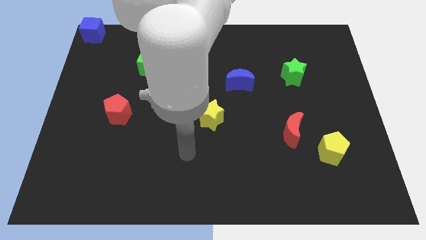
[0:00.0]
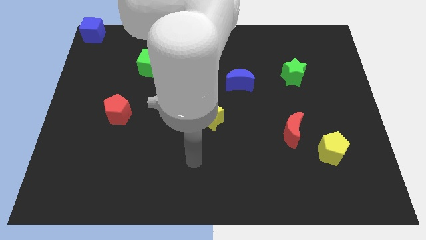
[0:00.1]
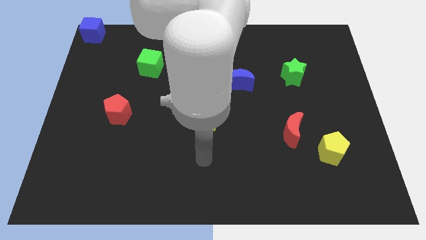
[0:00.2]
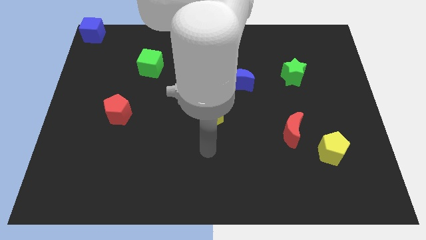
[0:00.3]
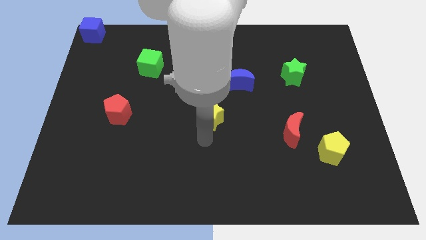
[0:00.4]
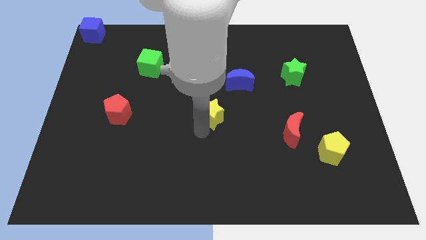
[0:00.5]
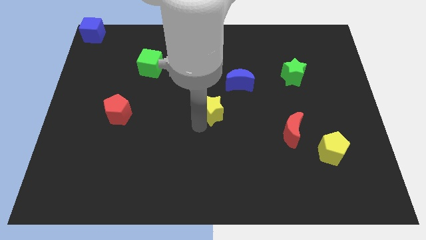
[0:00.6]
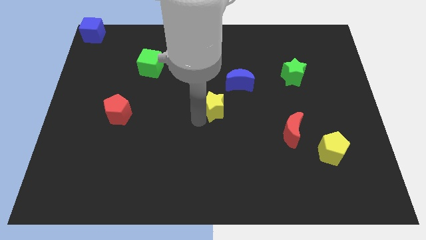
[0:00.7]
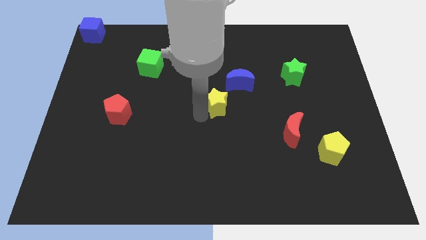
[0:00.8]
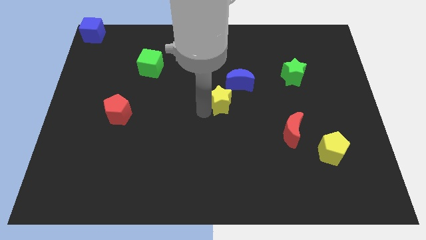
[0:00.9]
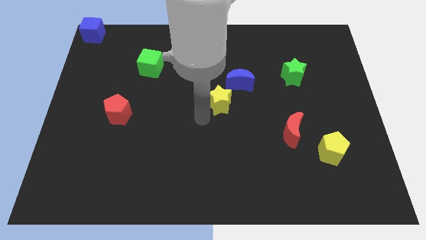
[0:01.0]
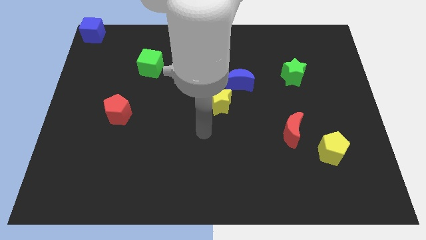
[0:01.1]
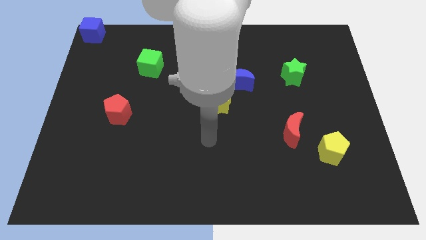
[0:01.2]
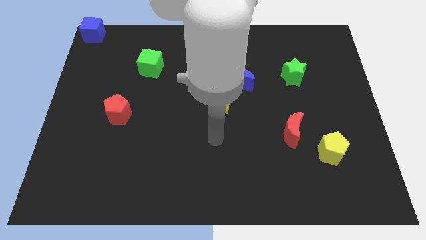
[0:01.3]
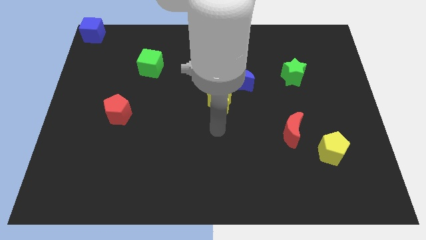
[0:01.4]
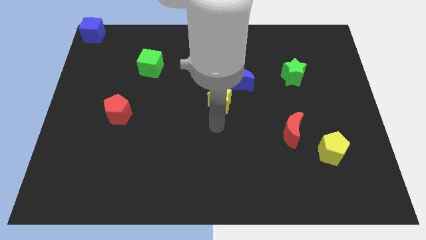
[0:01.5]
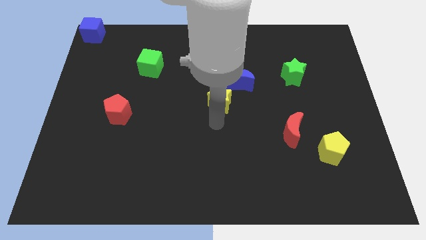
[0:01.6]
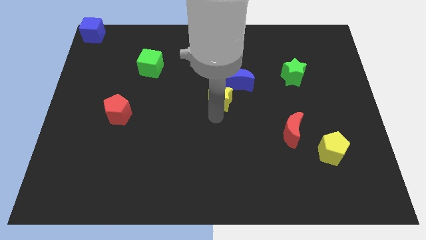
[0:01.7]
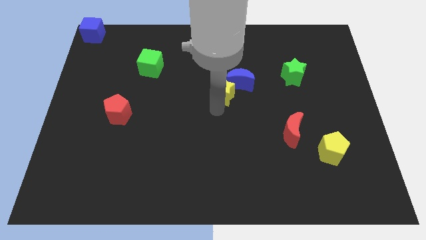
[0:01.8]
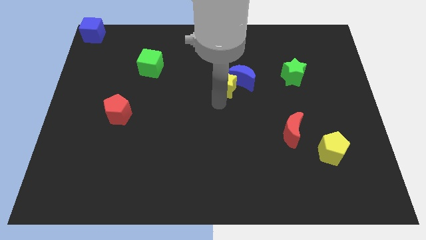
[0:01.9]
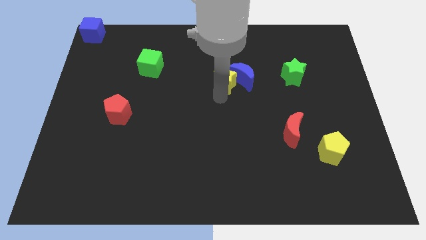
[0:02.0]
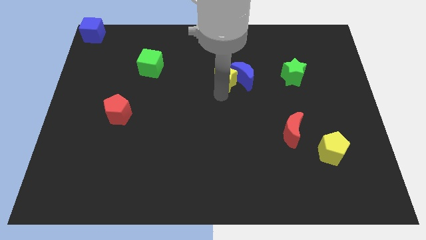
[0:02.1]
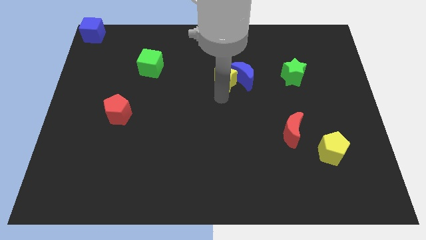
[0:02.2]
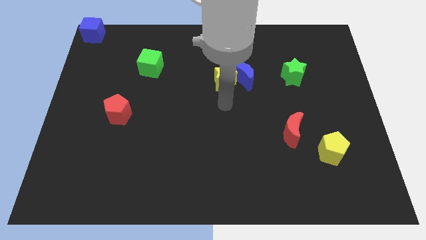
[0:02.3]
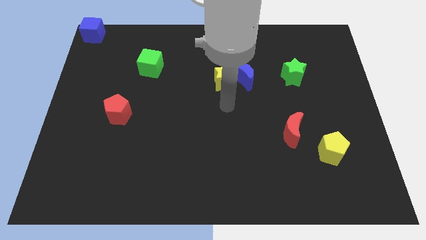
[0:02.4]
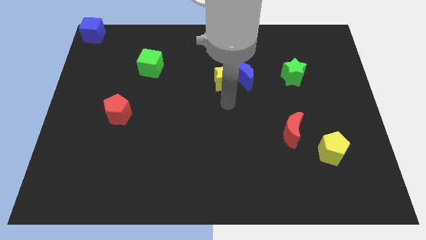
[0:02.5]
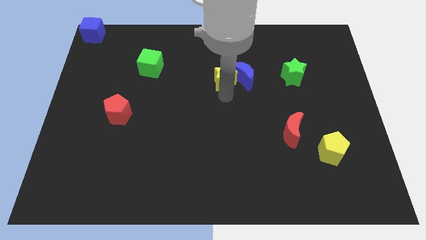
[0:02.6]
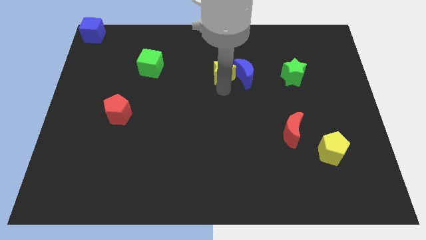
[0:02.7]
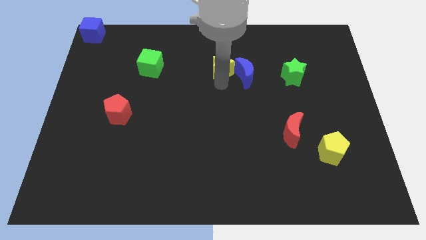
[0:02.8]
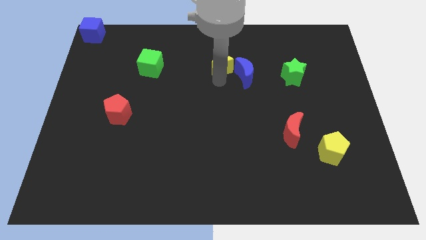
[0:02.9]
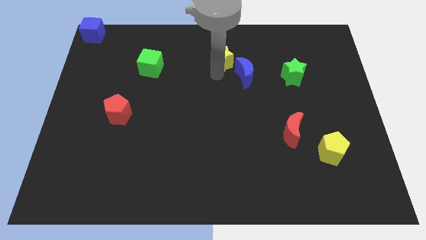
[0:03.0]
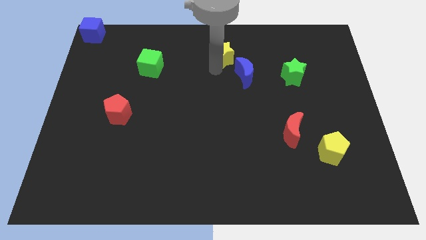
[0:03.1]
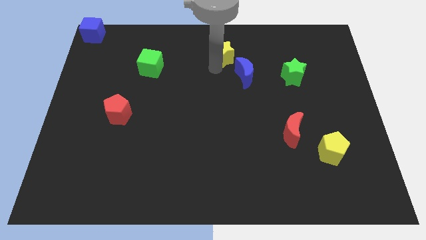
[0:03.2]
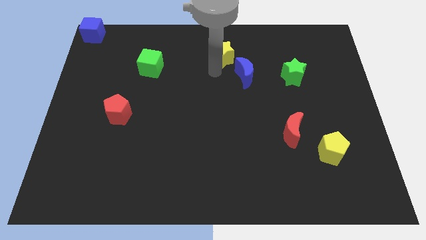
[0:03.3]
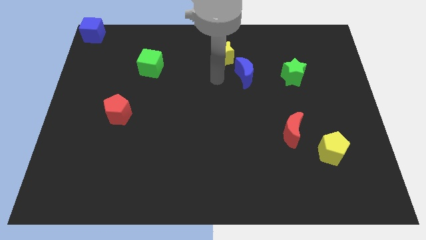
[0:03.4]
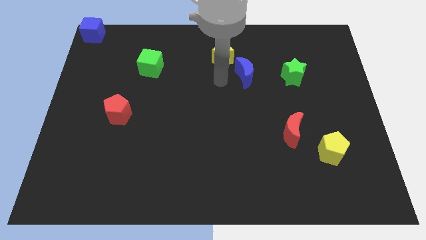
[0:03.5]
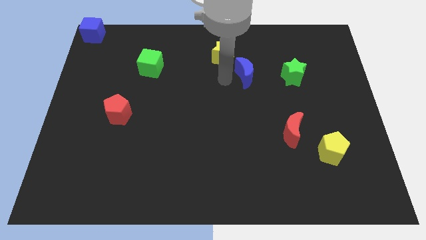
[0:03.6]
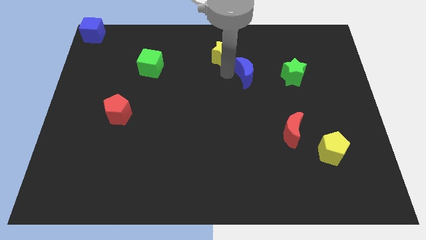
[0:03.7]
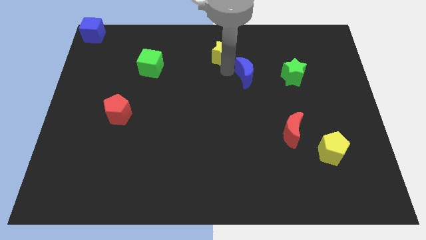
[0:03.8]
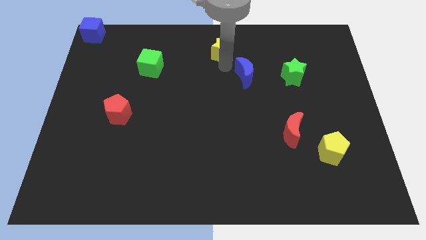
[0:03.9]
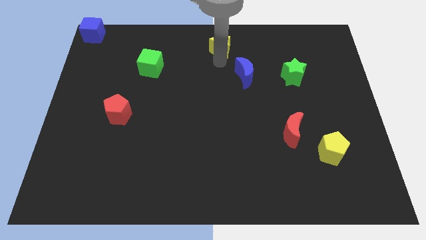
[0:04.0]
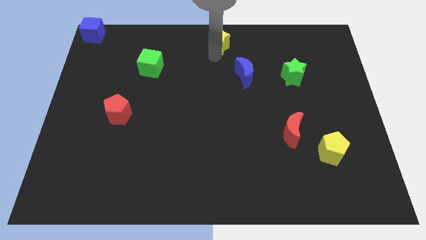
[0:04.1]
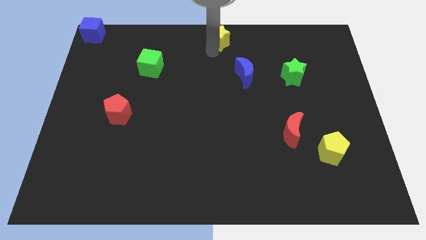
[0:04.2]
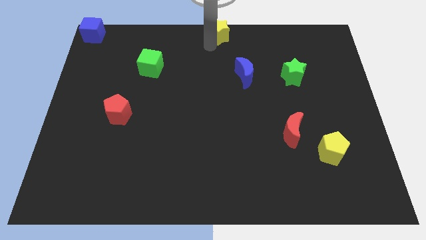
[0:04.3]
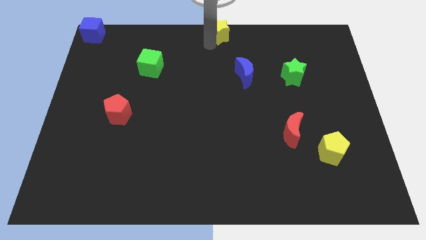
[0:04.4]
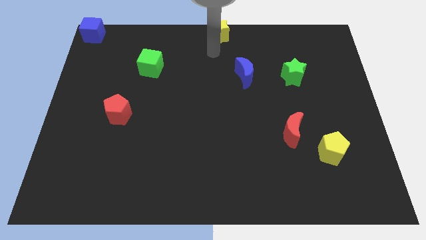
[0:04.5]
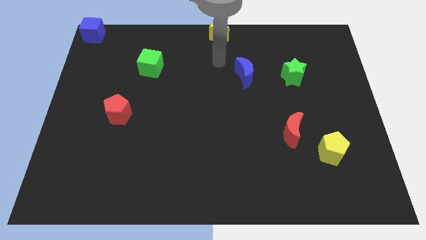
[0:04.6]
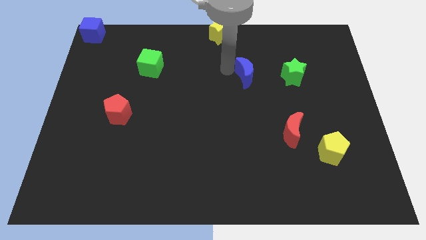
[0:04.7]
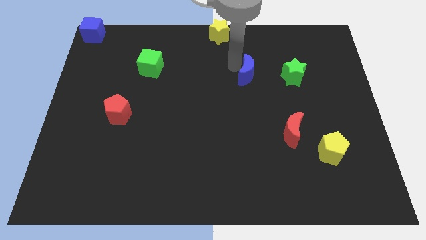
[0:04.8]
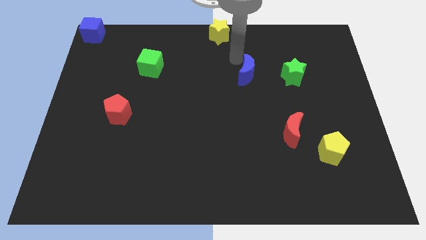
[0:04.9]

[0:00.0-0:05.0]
place the yellow star above the blue moon

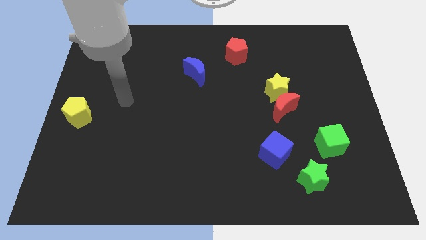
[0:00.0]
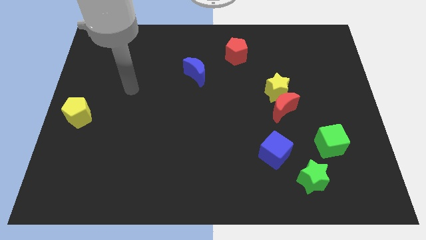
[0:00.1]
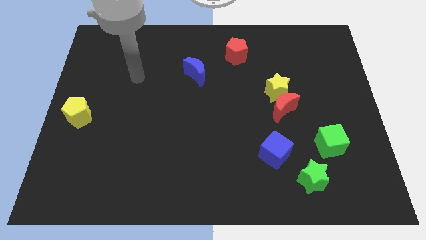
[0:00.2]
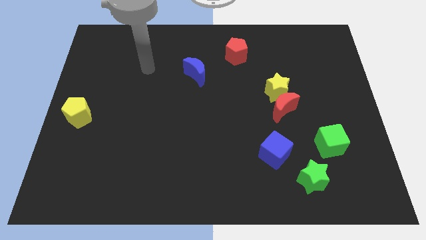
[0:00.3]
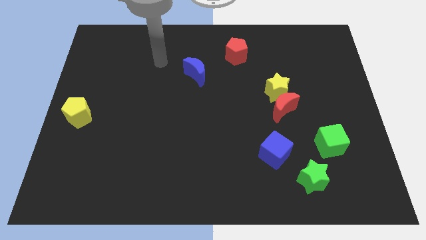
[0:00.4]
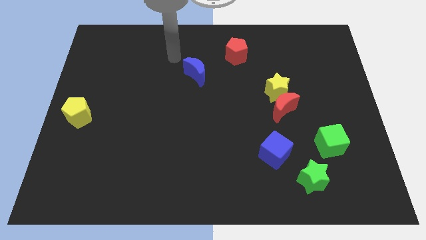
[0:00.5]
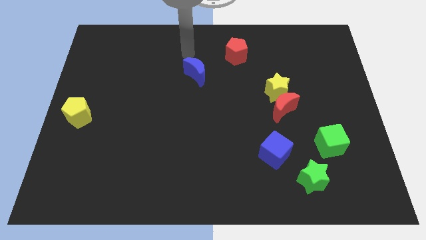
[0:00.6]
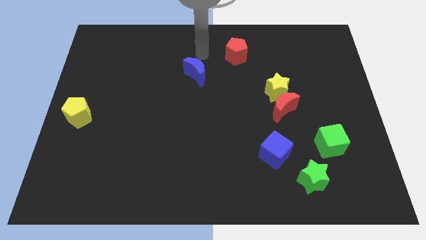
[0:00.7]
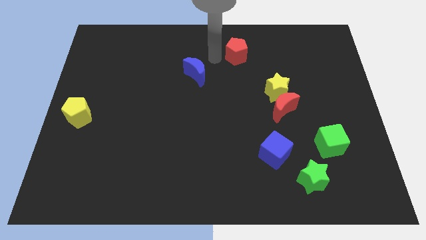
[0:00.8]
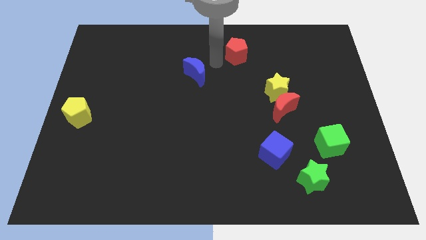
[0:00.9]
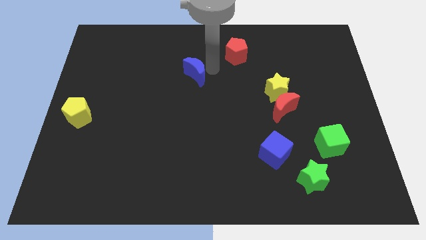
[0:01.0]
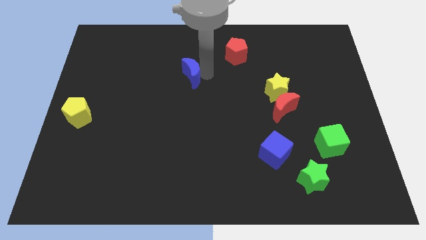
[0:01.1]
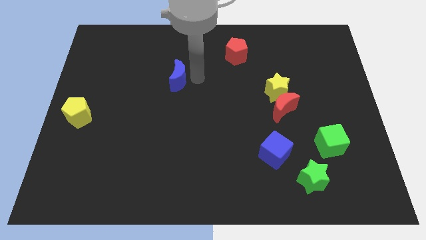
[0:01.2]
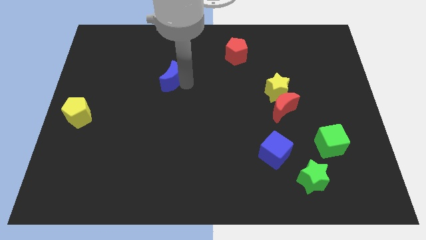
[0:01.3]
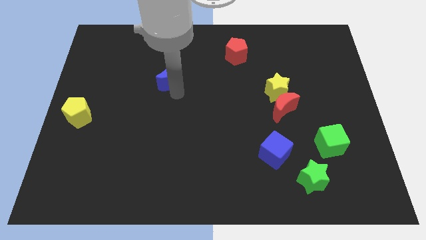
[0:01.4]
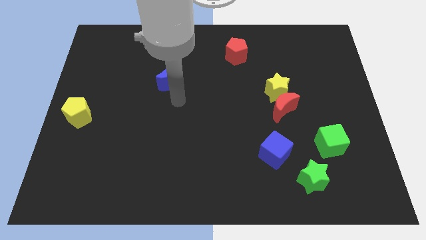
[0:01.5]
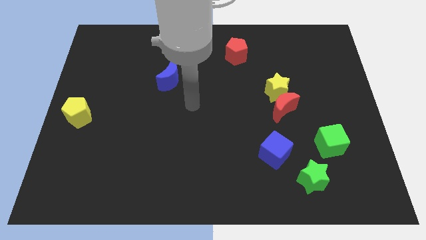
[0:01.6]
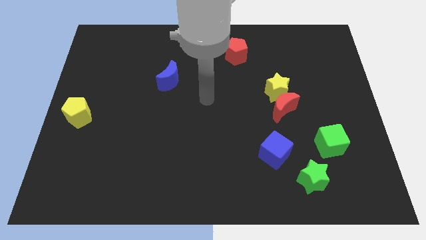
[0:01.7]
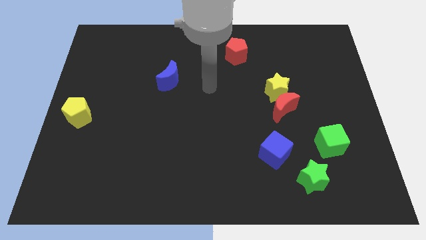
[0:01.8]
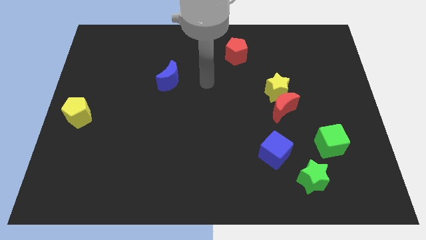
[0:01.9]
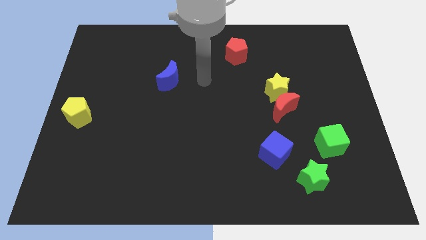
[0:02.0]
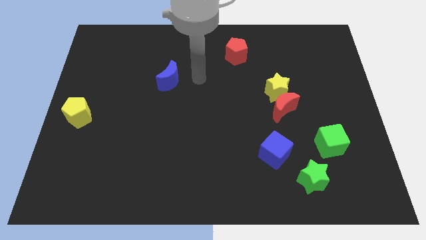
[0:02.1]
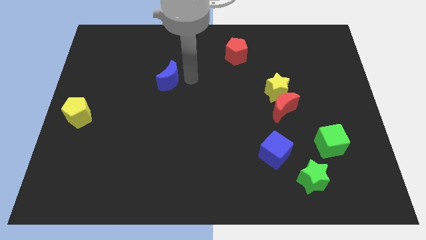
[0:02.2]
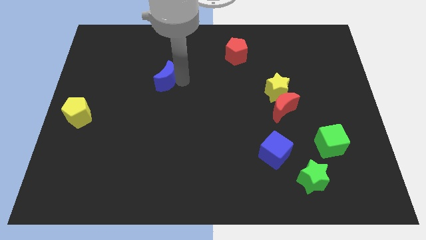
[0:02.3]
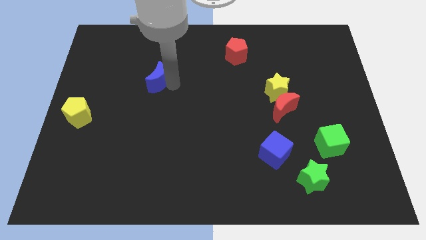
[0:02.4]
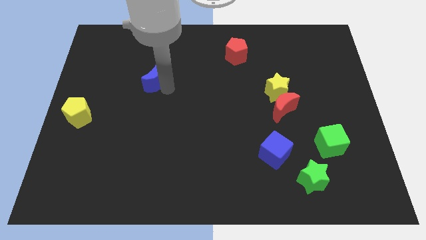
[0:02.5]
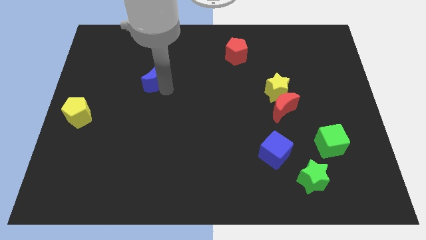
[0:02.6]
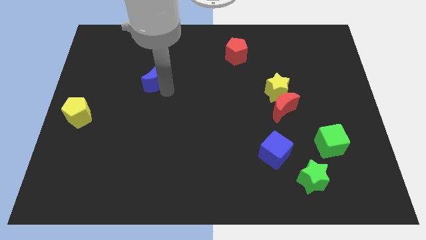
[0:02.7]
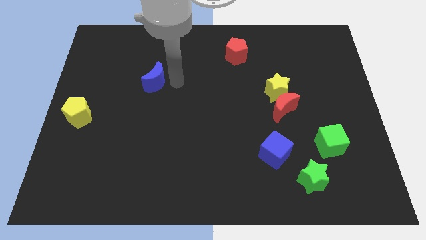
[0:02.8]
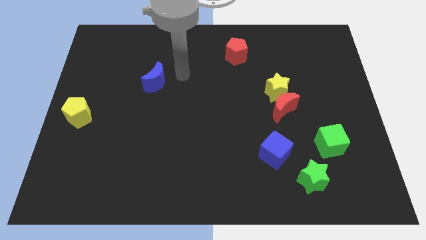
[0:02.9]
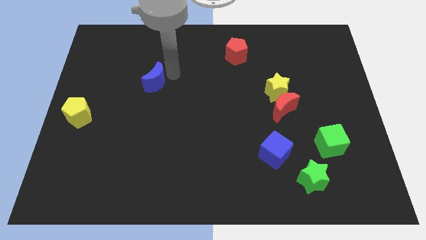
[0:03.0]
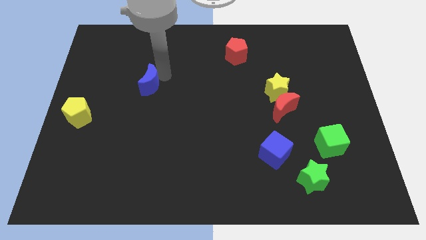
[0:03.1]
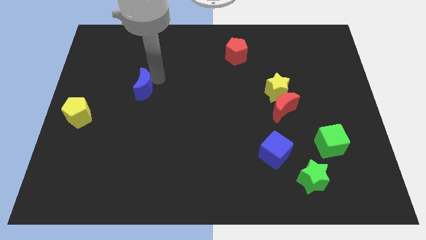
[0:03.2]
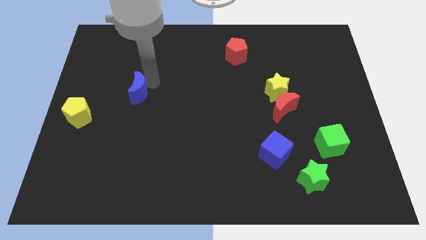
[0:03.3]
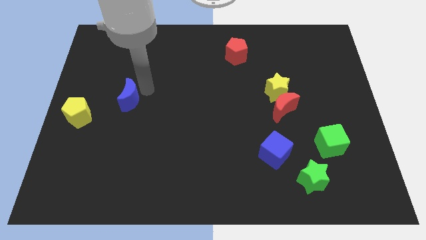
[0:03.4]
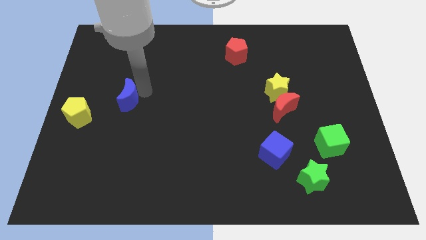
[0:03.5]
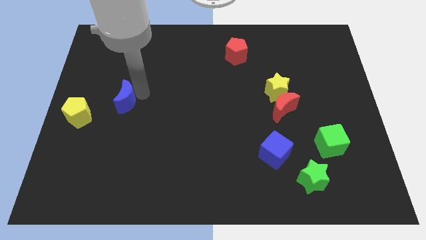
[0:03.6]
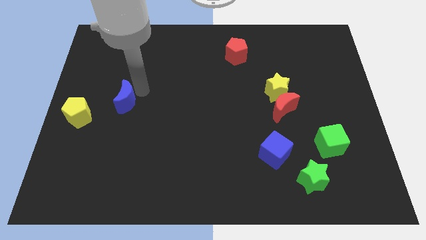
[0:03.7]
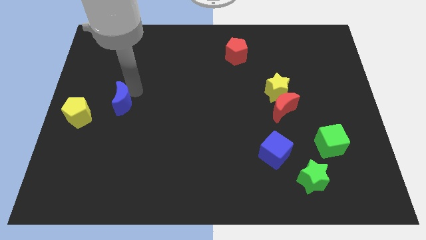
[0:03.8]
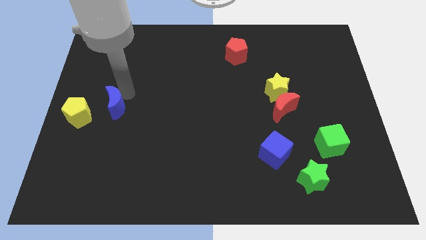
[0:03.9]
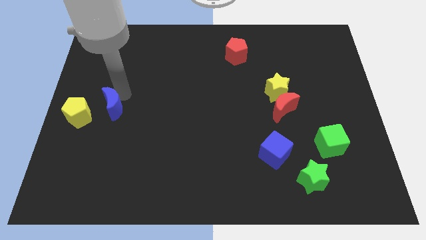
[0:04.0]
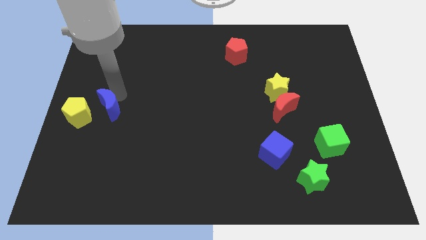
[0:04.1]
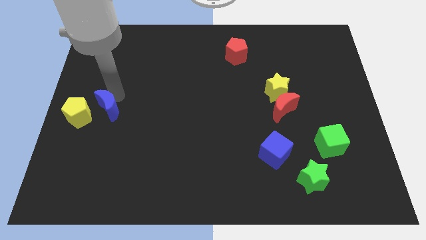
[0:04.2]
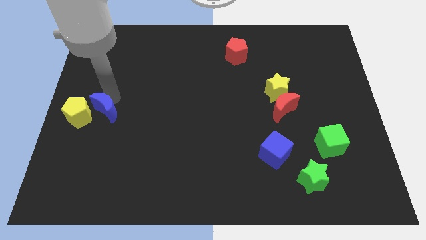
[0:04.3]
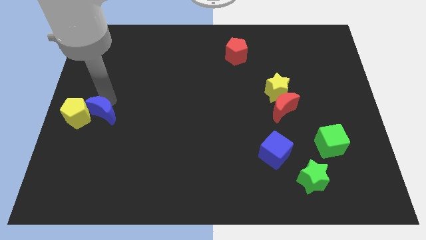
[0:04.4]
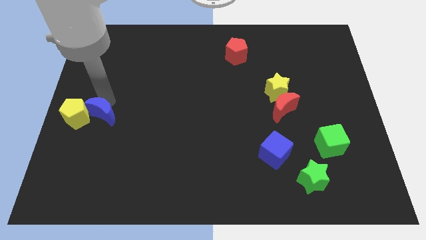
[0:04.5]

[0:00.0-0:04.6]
move the blue crescent into the yellow pentagon
